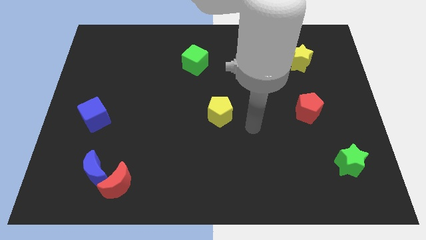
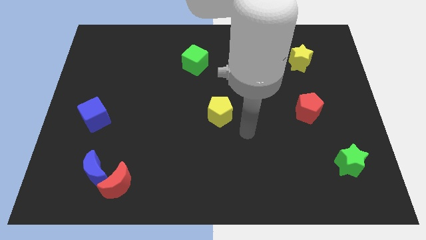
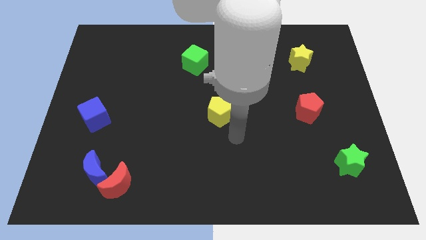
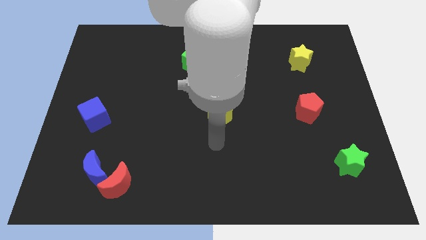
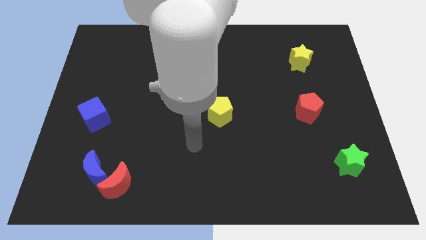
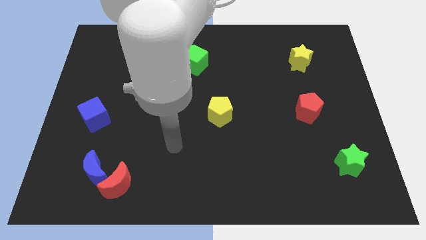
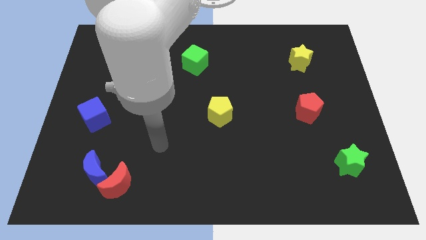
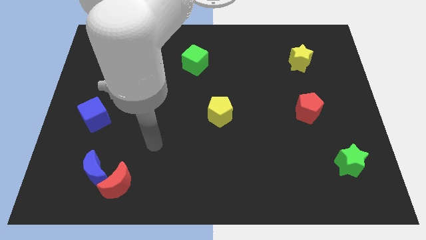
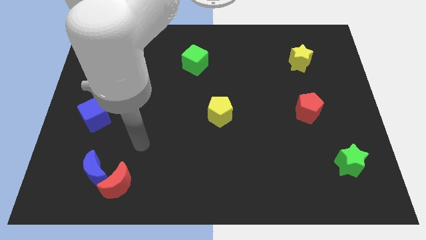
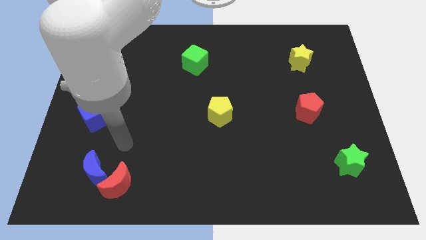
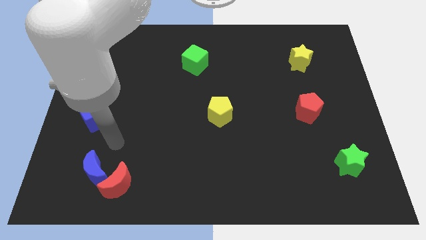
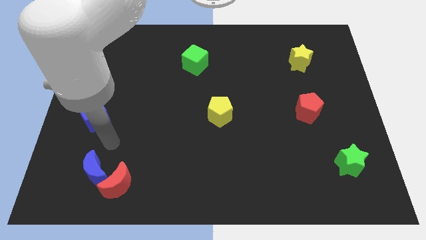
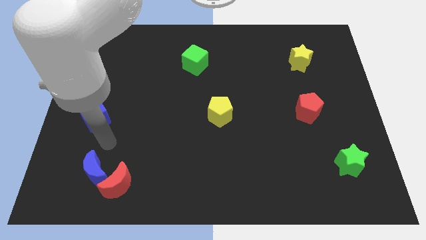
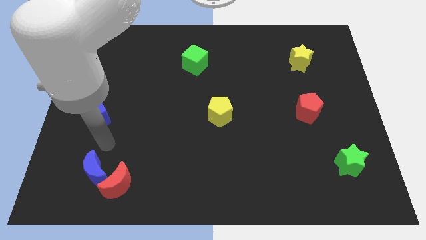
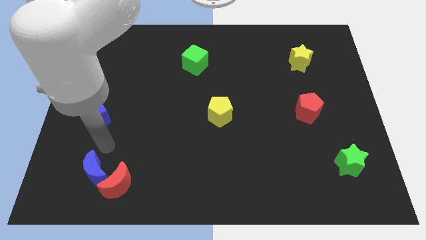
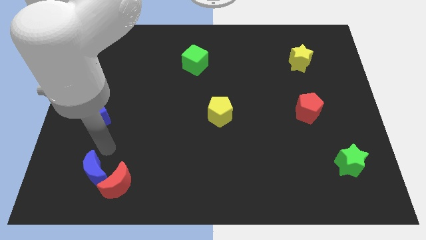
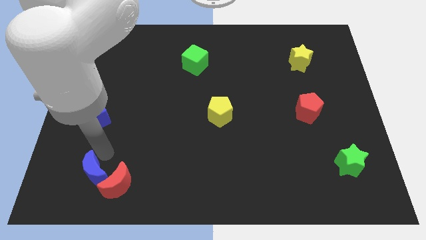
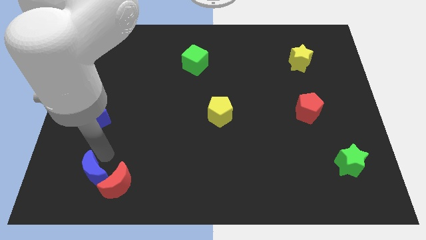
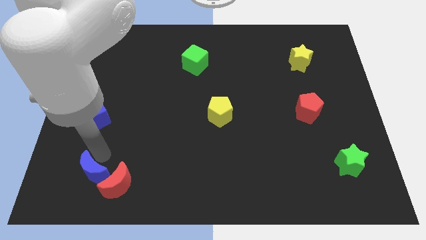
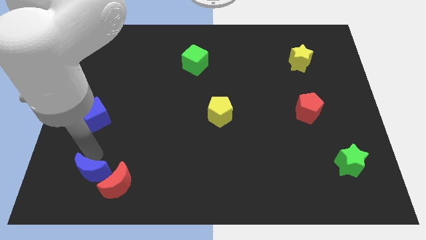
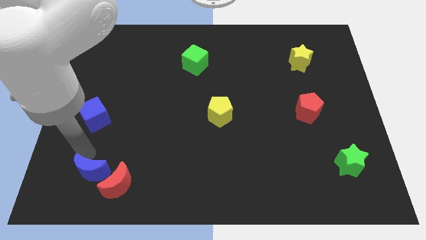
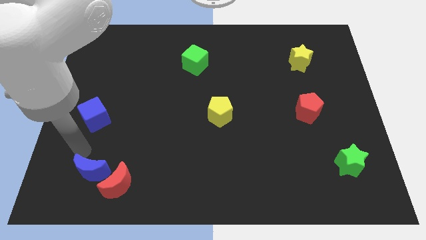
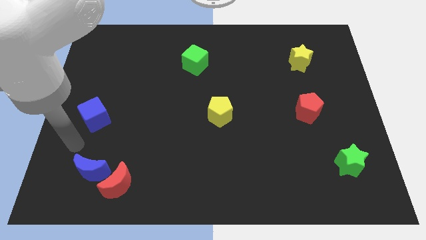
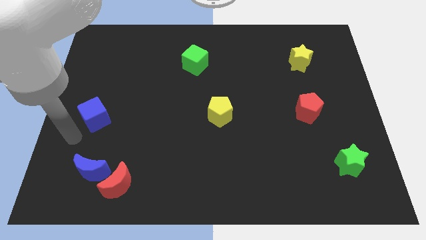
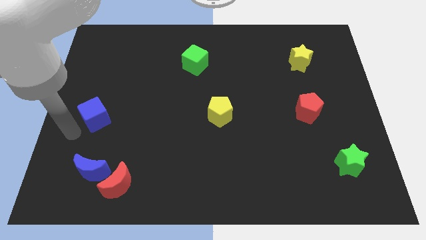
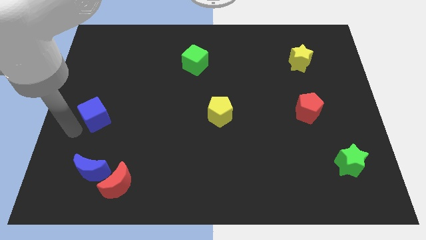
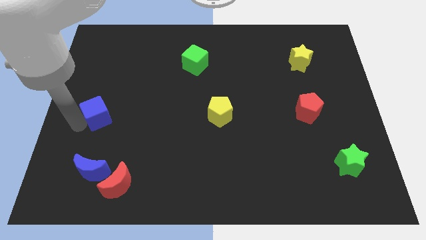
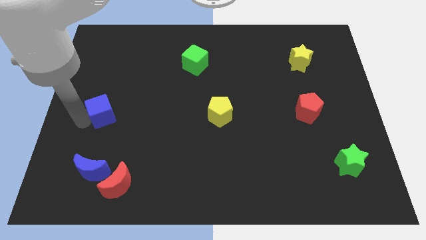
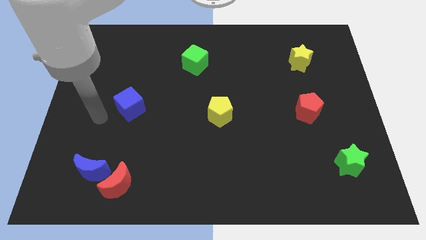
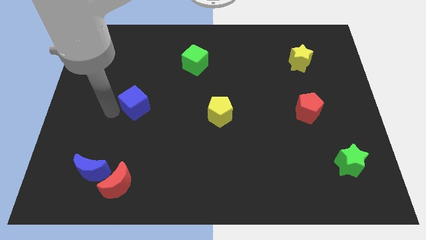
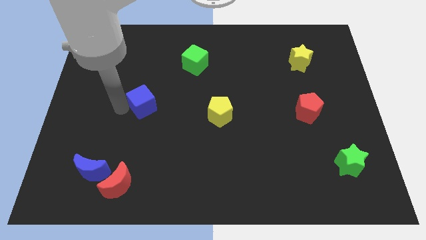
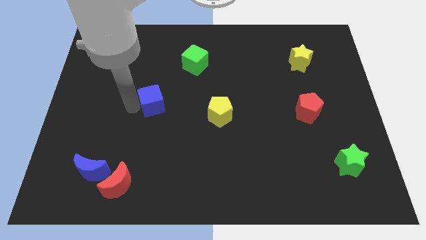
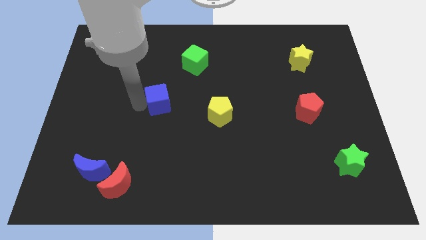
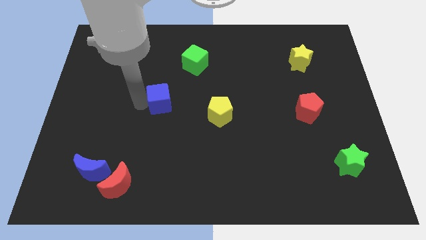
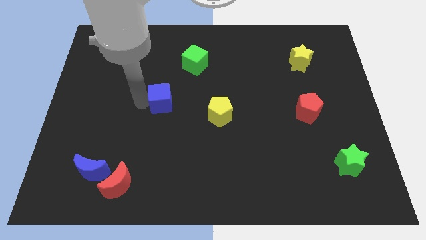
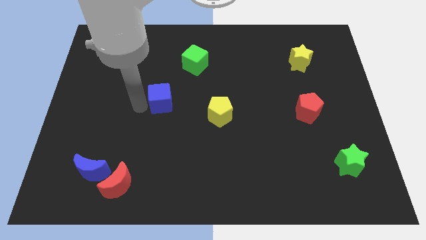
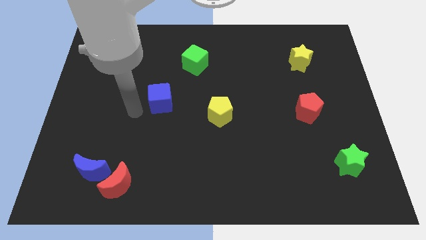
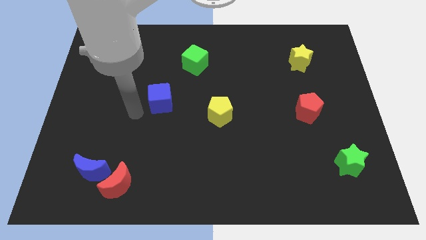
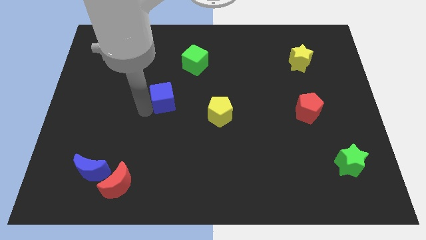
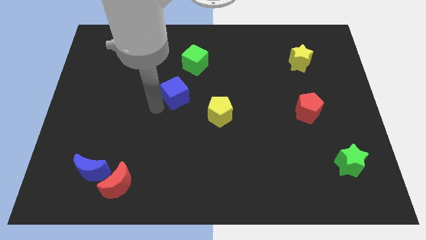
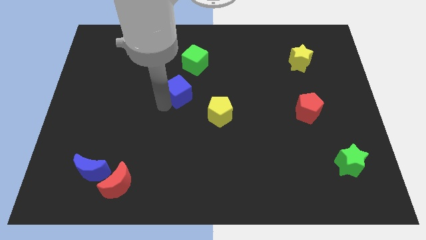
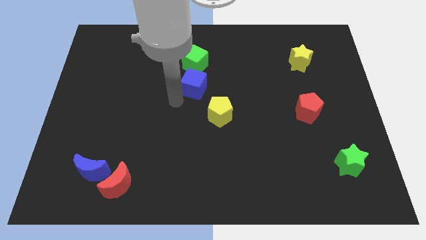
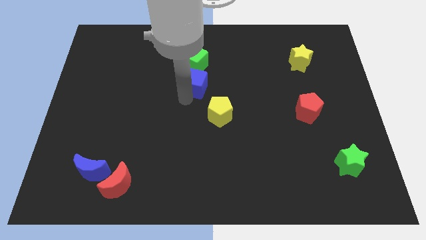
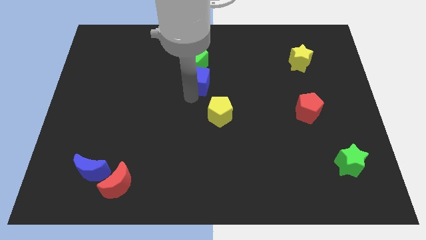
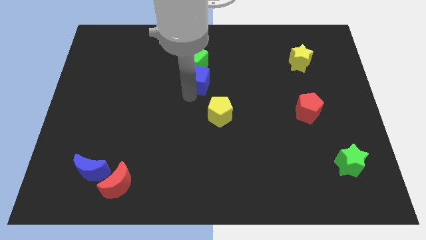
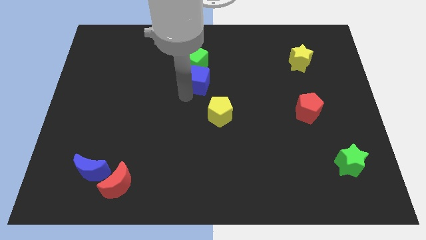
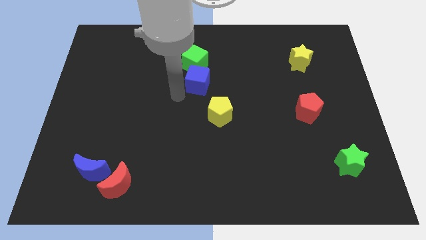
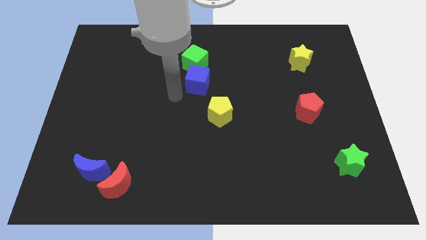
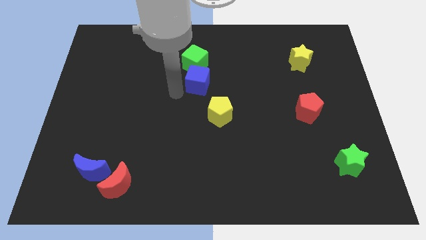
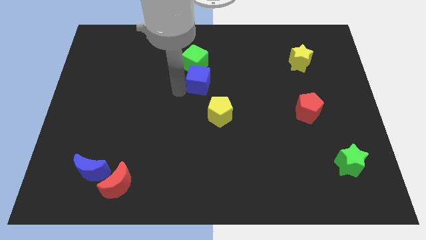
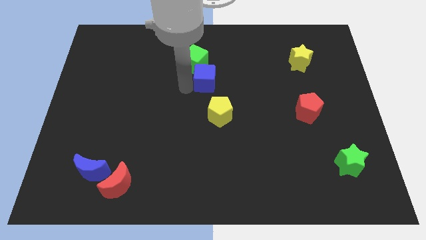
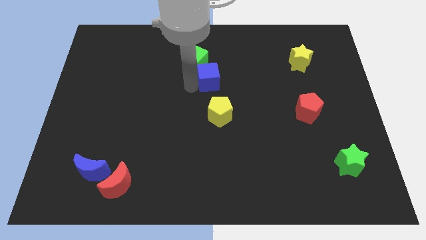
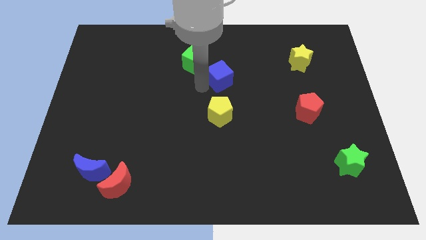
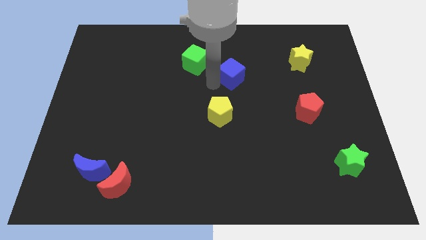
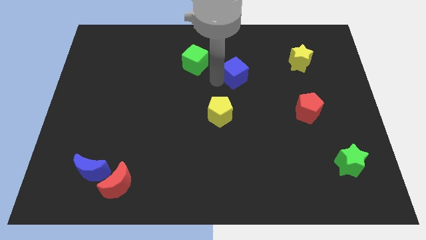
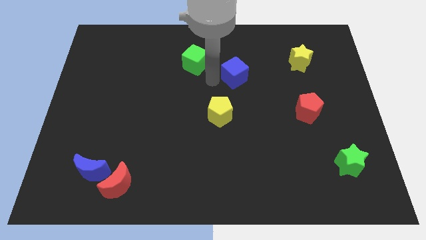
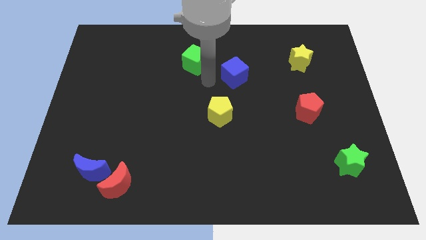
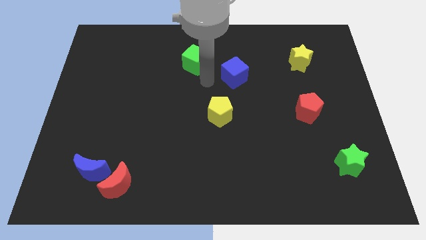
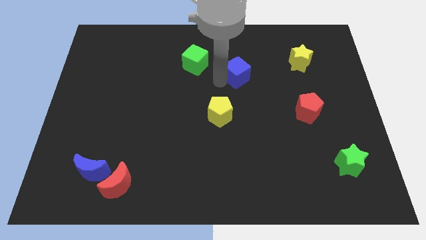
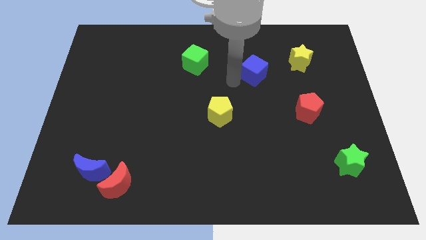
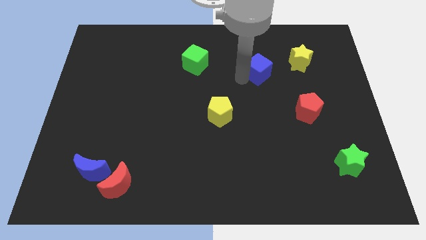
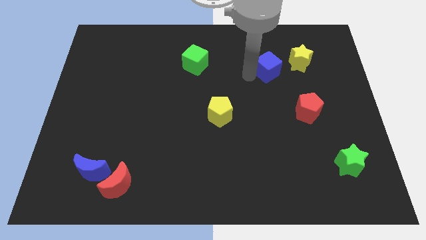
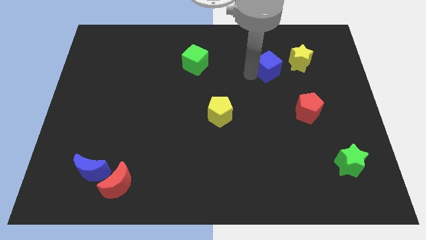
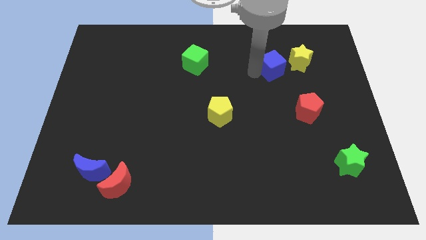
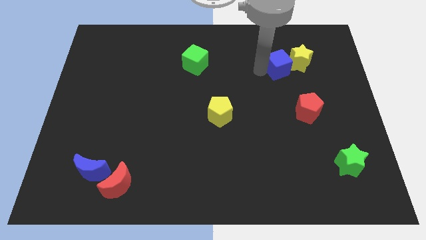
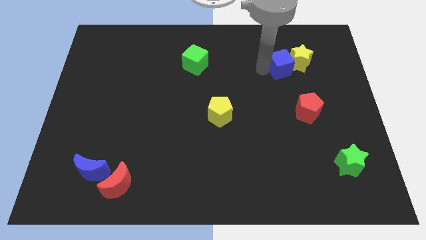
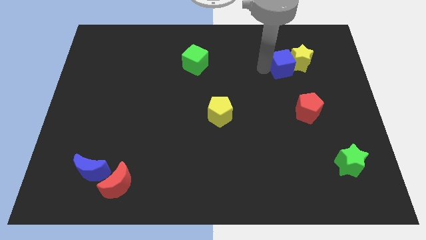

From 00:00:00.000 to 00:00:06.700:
push the blue cube towards the yellow star

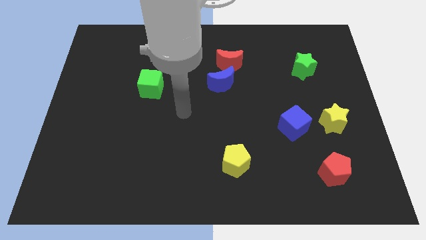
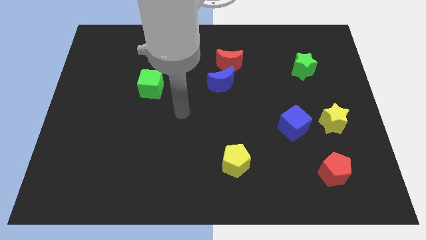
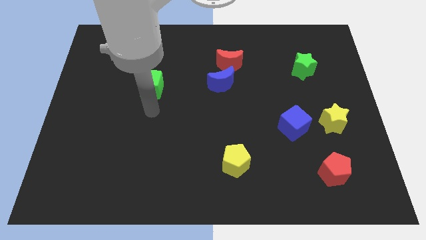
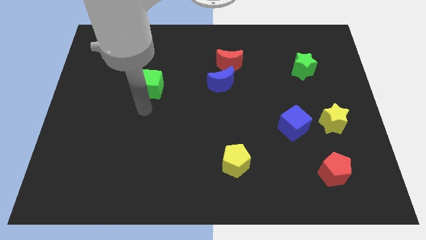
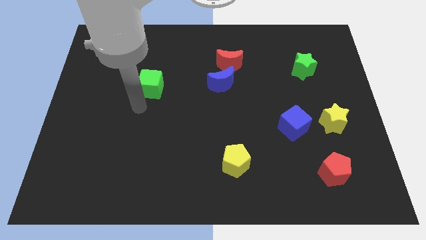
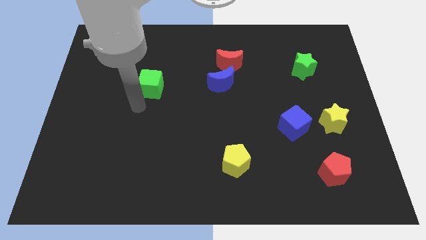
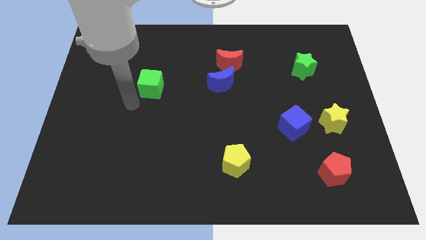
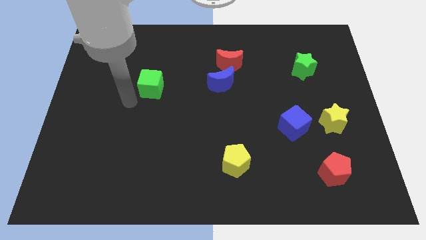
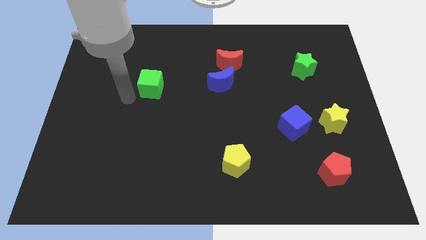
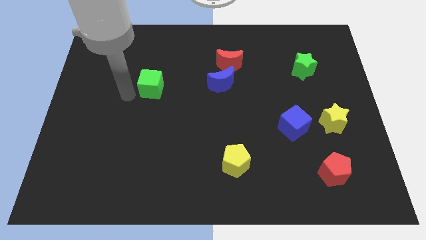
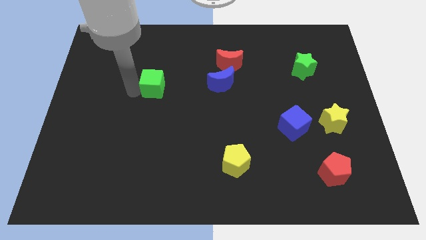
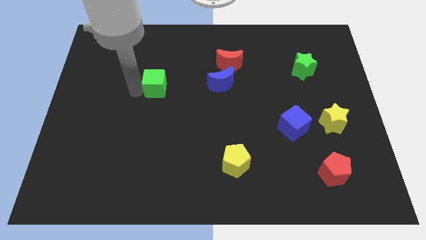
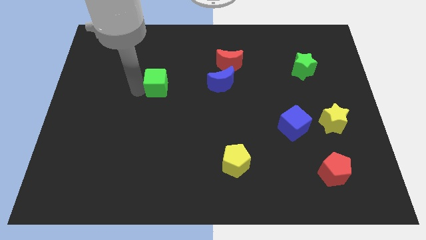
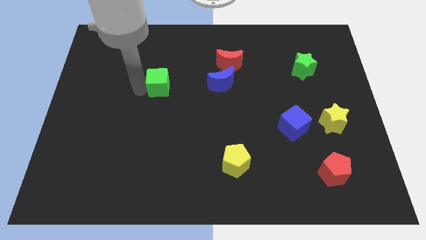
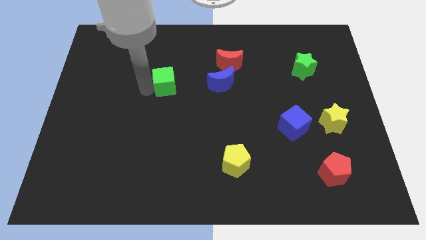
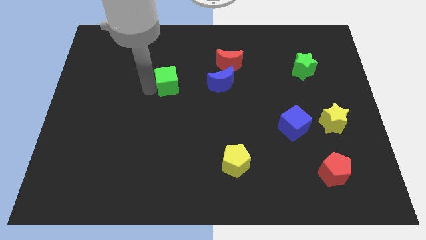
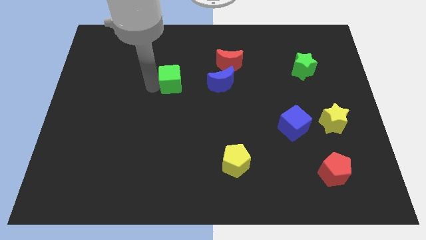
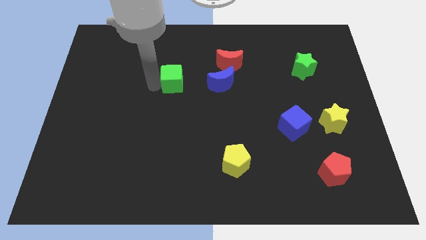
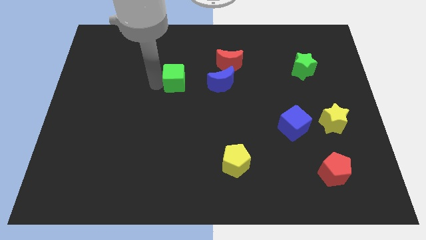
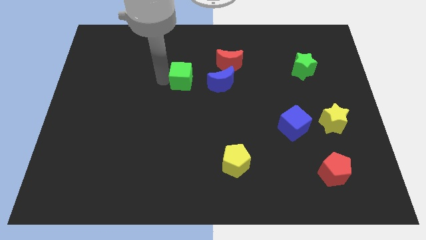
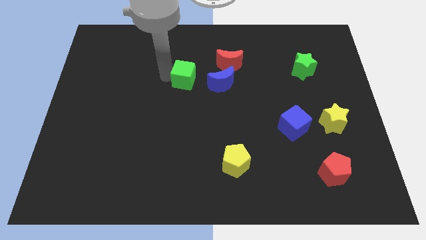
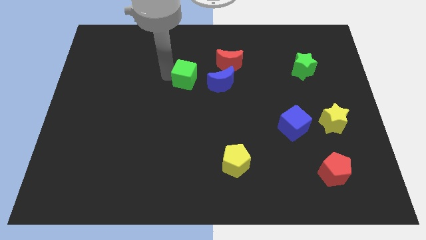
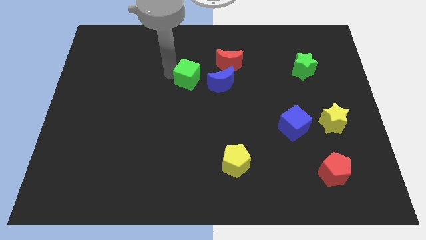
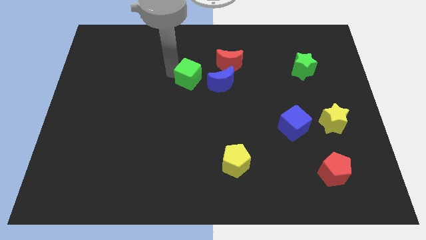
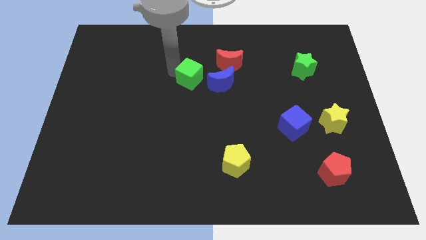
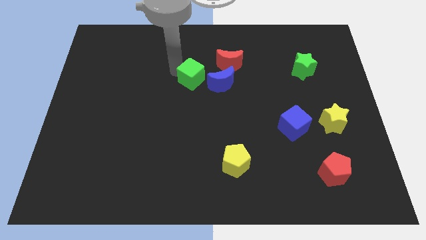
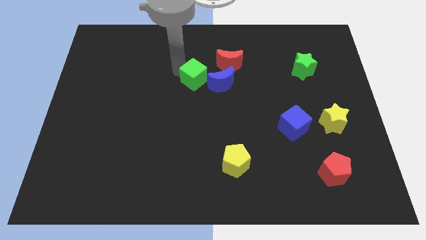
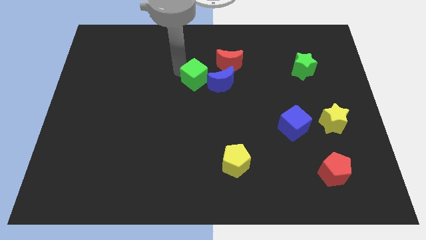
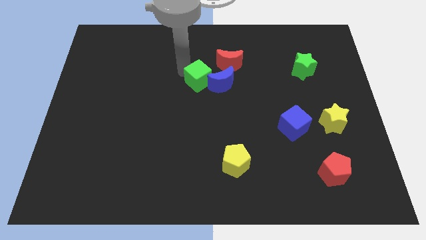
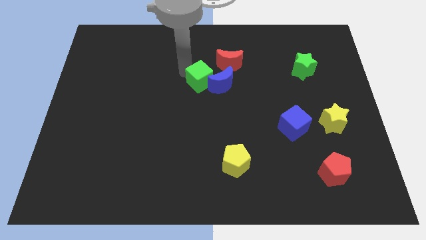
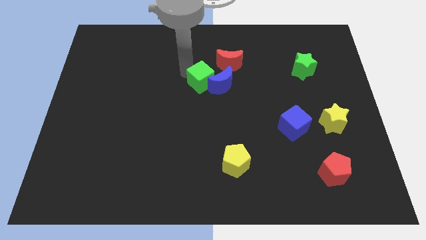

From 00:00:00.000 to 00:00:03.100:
slide the green cube to the blue moon
